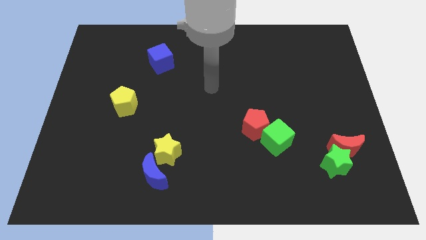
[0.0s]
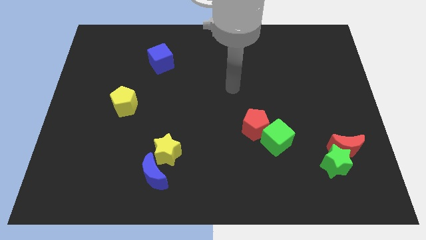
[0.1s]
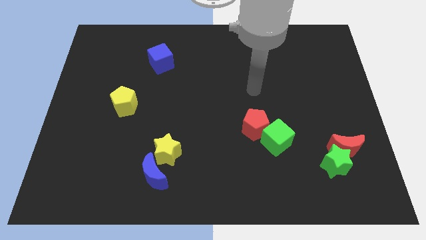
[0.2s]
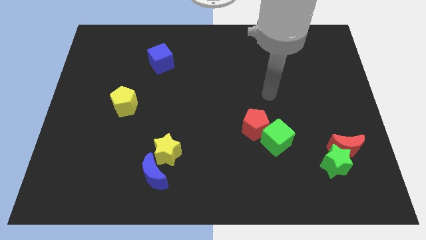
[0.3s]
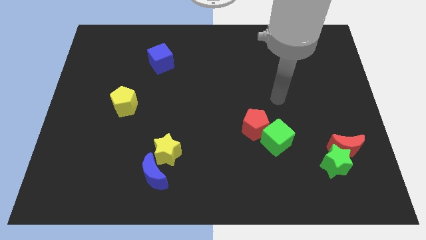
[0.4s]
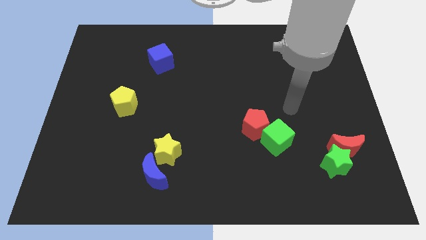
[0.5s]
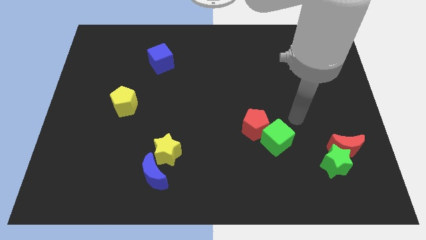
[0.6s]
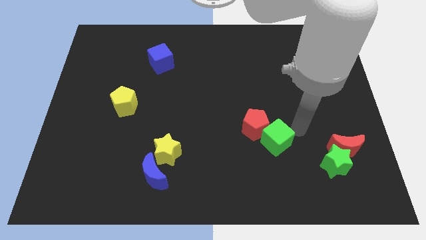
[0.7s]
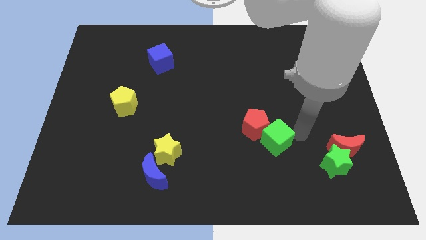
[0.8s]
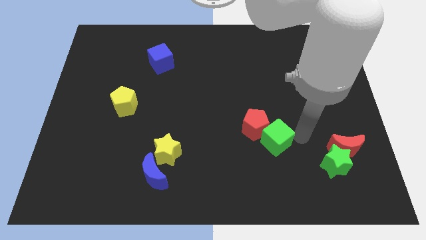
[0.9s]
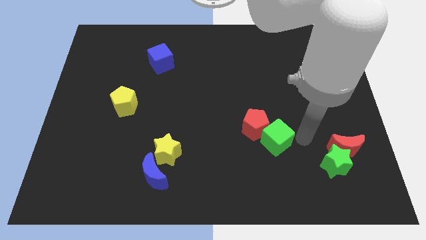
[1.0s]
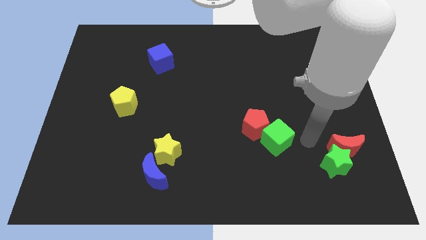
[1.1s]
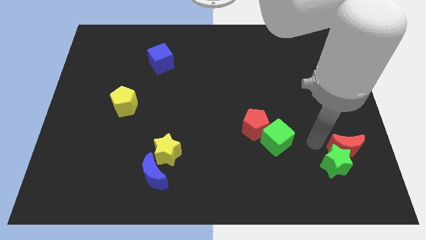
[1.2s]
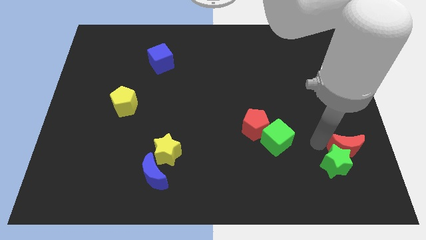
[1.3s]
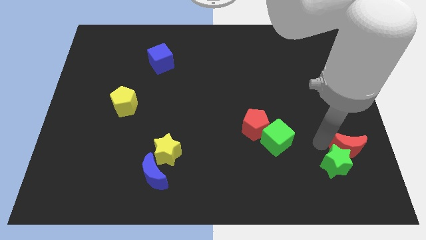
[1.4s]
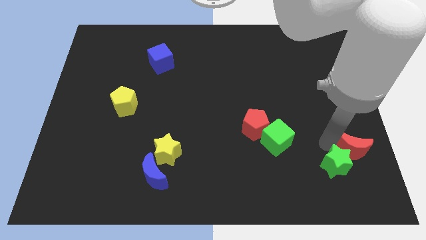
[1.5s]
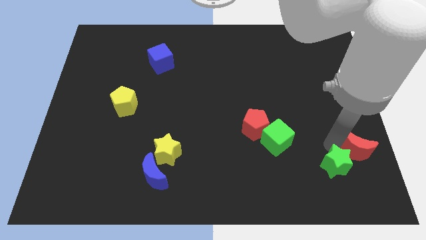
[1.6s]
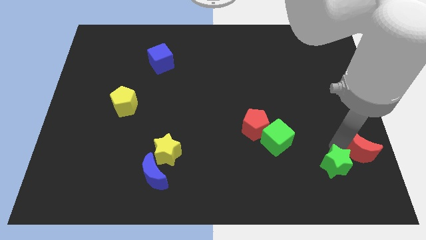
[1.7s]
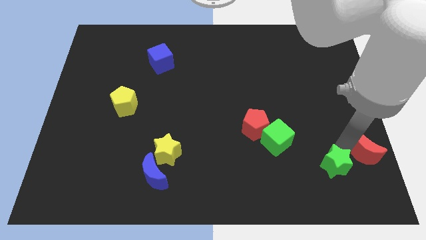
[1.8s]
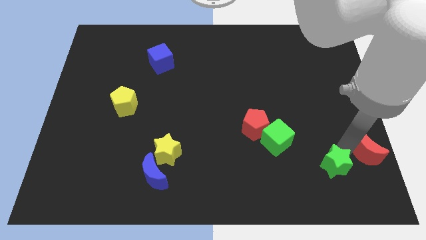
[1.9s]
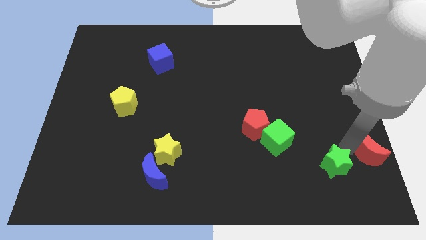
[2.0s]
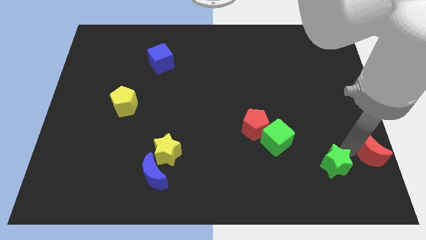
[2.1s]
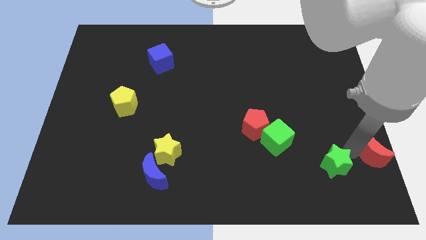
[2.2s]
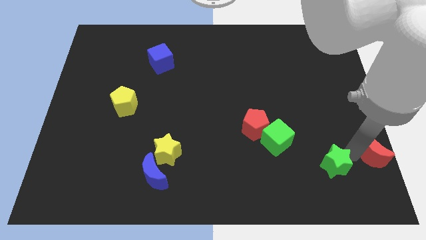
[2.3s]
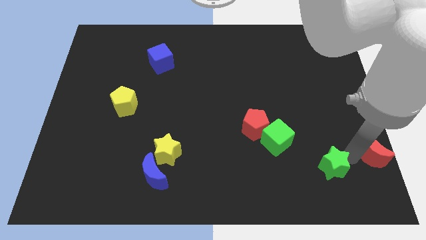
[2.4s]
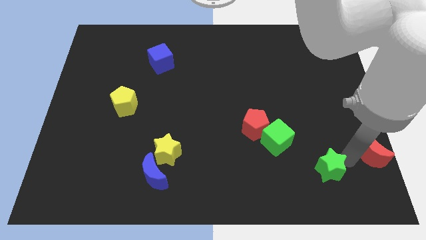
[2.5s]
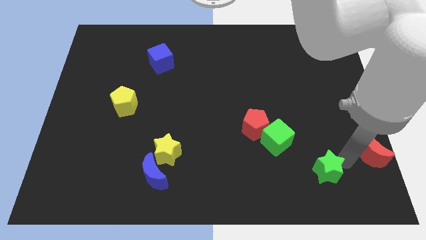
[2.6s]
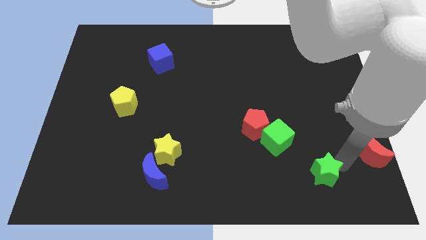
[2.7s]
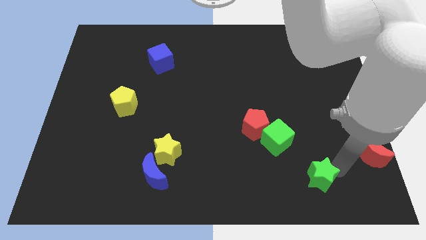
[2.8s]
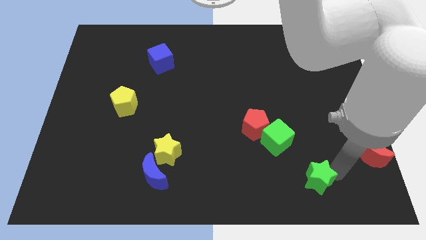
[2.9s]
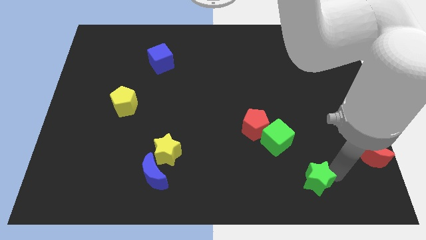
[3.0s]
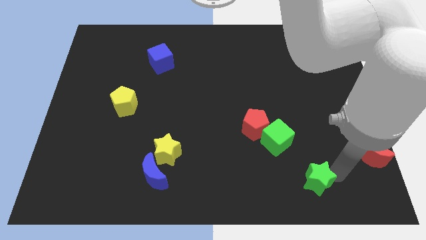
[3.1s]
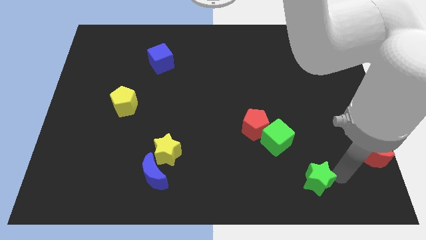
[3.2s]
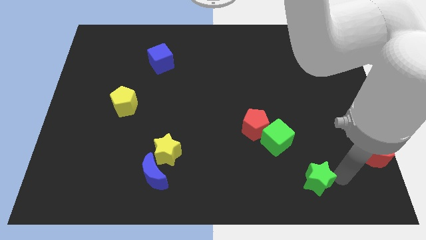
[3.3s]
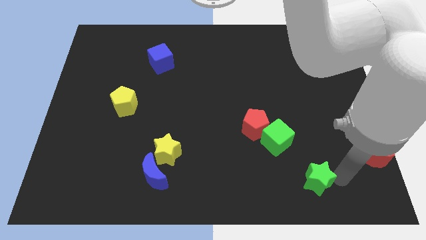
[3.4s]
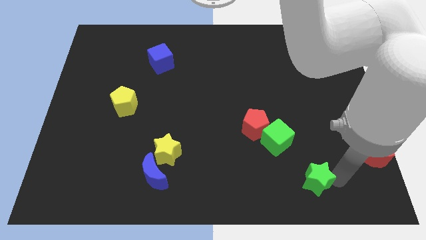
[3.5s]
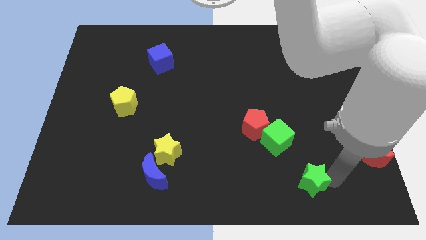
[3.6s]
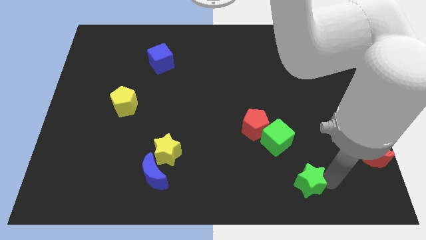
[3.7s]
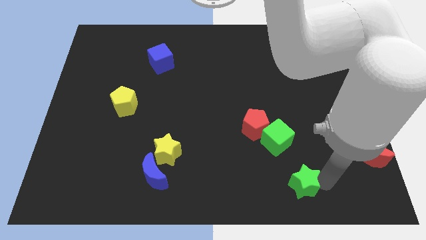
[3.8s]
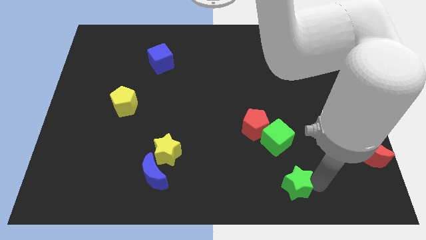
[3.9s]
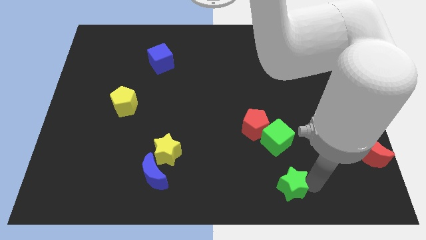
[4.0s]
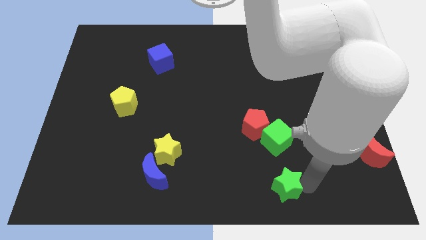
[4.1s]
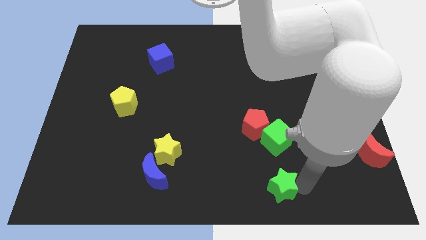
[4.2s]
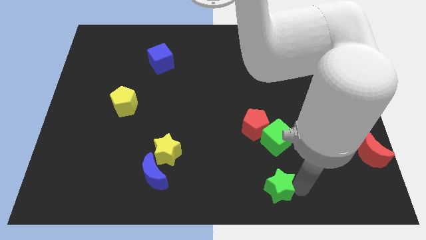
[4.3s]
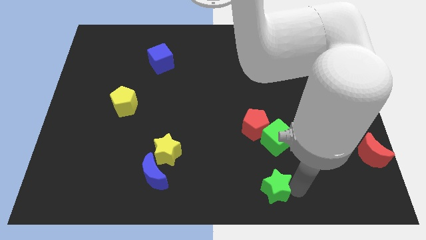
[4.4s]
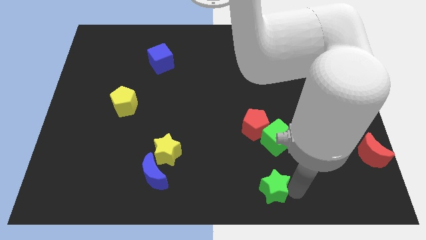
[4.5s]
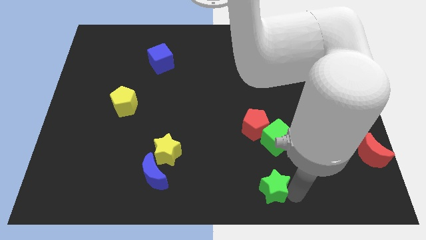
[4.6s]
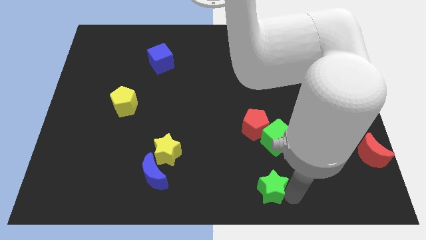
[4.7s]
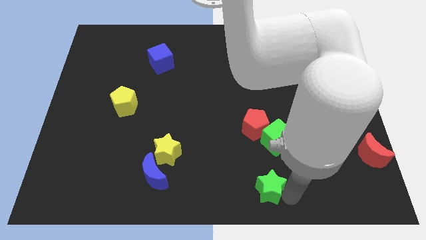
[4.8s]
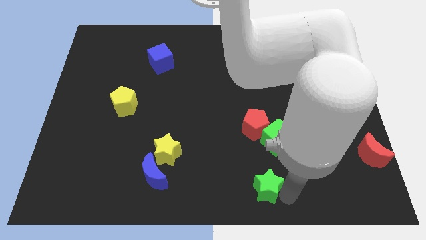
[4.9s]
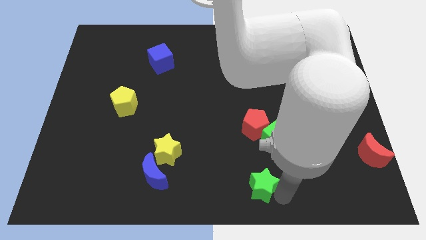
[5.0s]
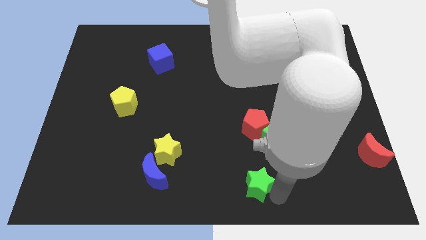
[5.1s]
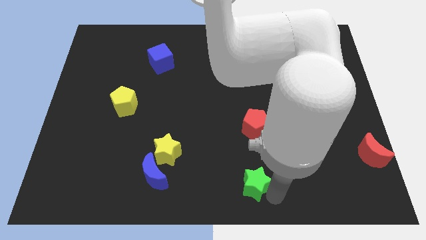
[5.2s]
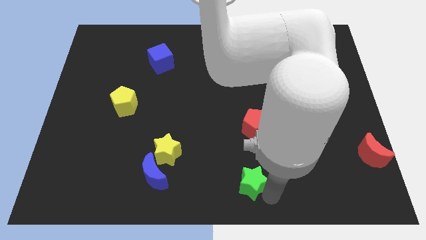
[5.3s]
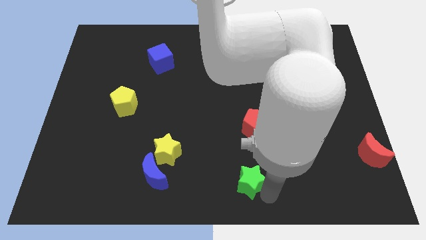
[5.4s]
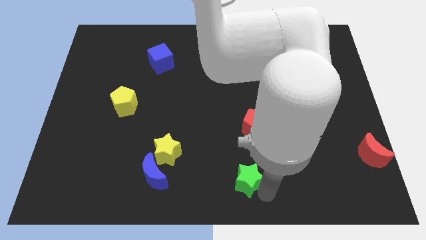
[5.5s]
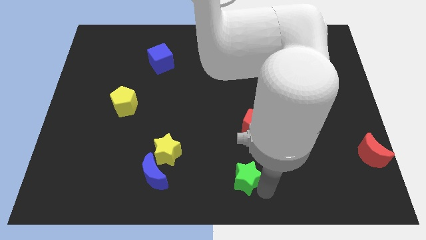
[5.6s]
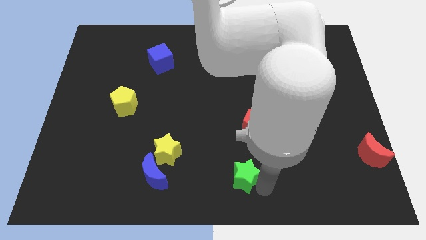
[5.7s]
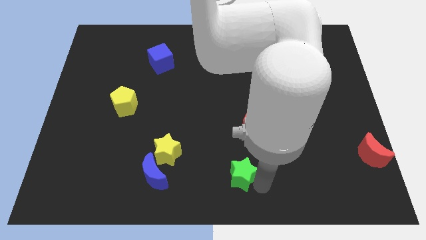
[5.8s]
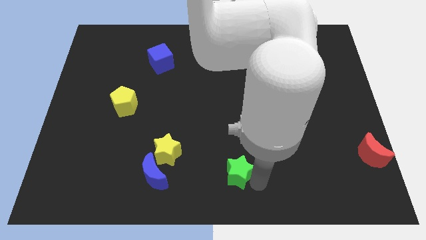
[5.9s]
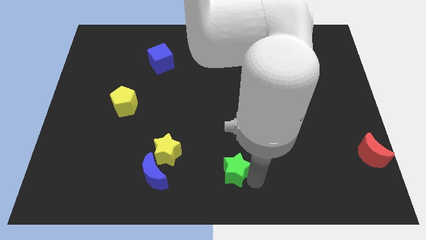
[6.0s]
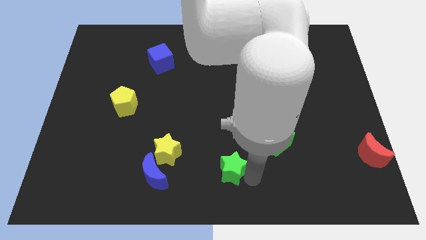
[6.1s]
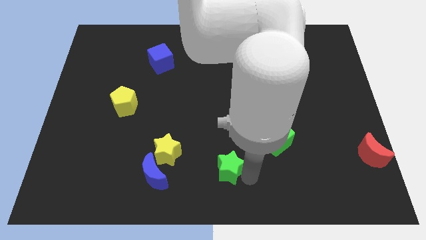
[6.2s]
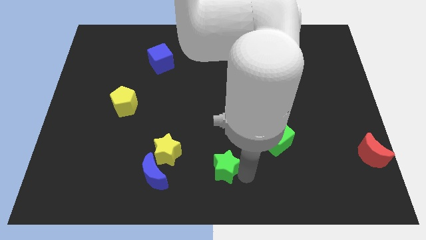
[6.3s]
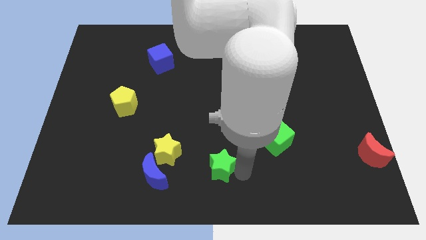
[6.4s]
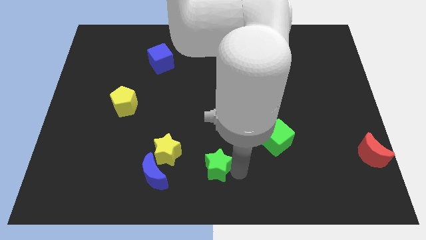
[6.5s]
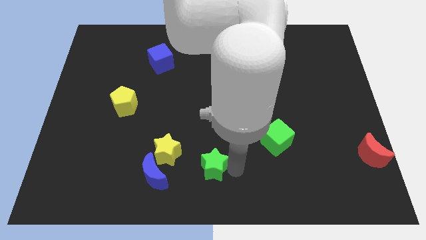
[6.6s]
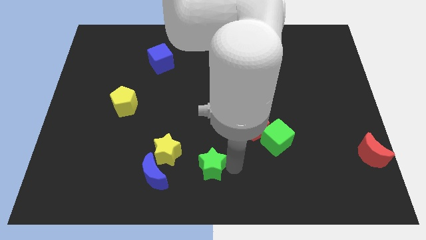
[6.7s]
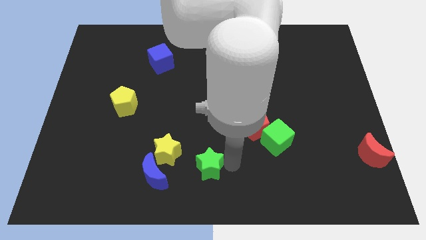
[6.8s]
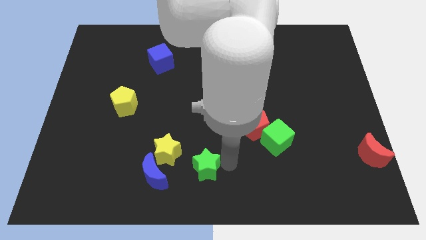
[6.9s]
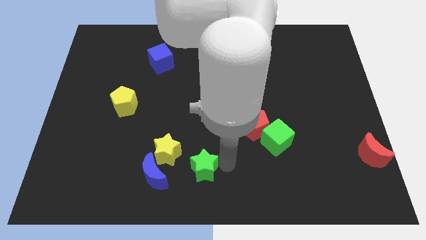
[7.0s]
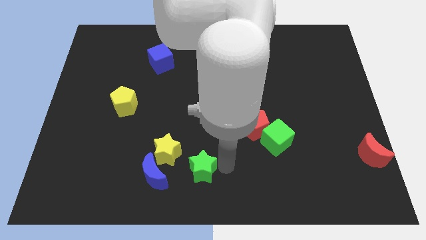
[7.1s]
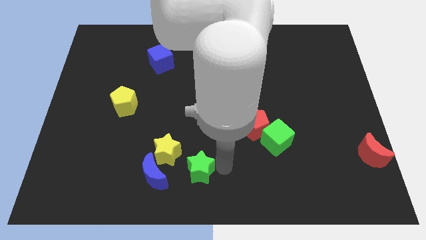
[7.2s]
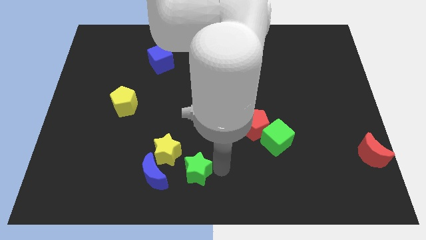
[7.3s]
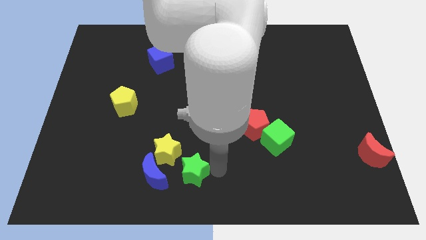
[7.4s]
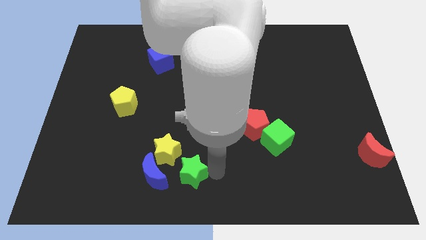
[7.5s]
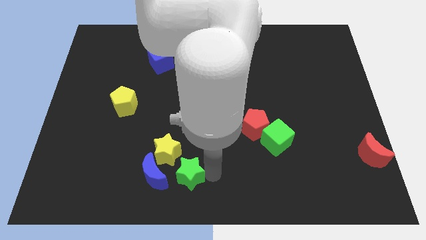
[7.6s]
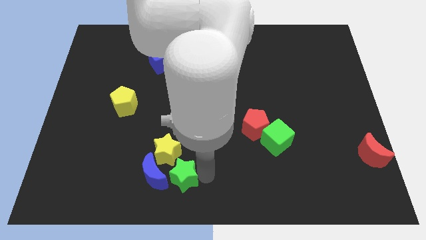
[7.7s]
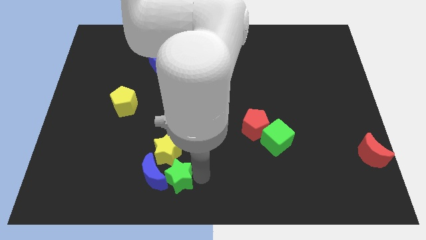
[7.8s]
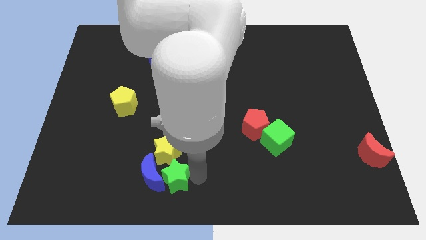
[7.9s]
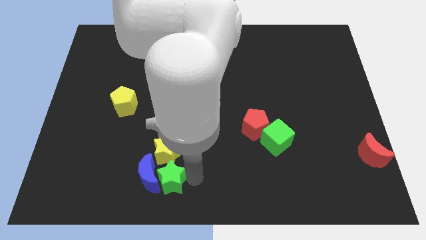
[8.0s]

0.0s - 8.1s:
slide the green star to the blue moon
